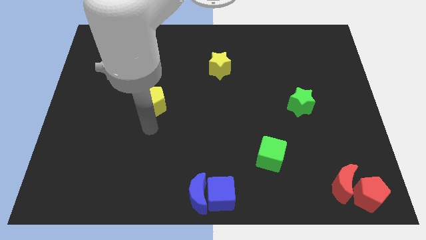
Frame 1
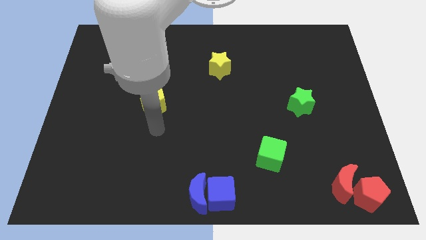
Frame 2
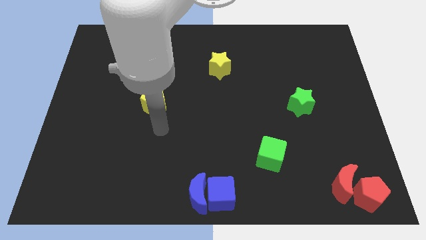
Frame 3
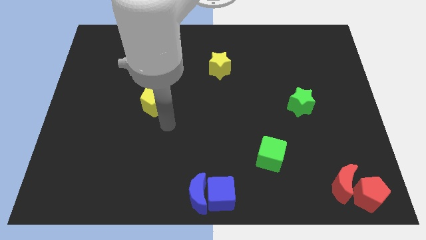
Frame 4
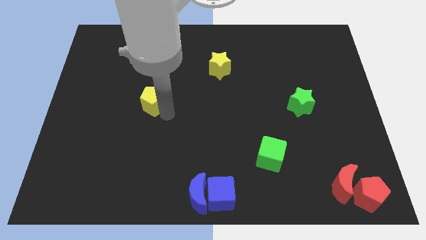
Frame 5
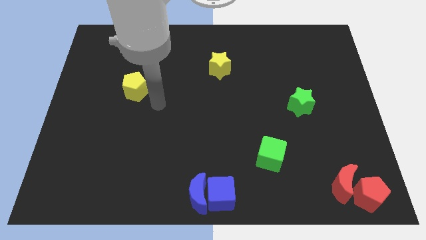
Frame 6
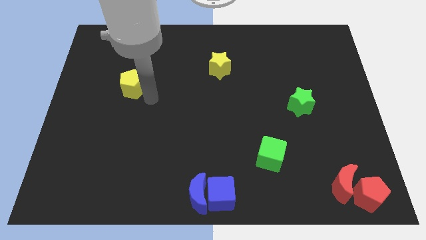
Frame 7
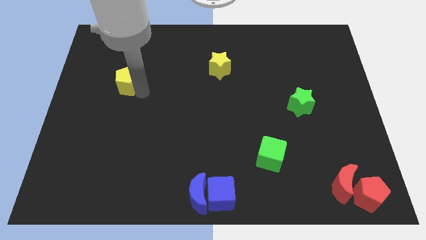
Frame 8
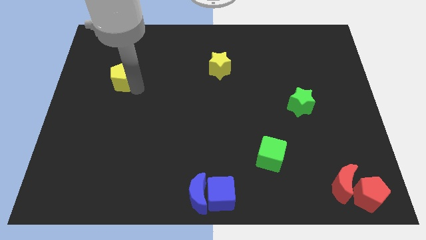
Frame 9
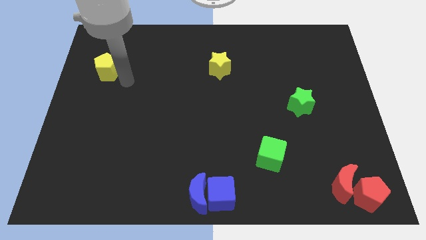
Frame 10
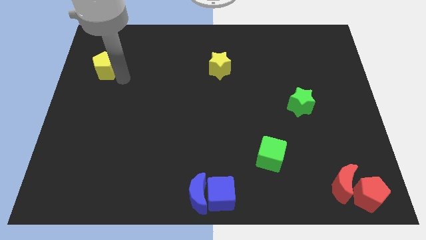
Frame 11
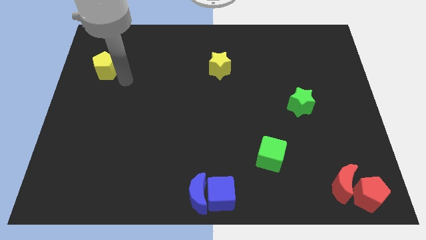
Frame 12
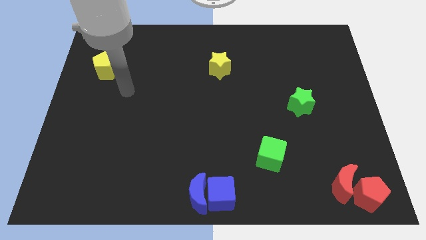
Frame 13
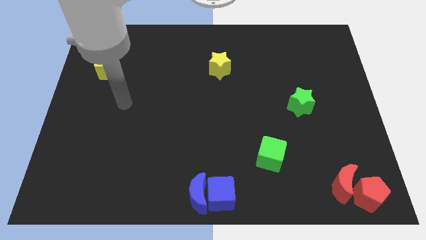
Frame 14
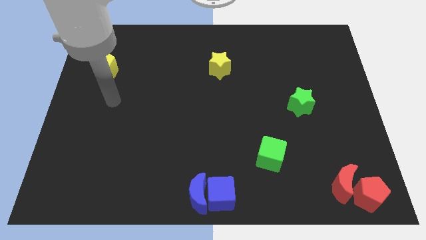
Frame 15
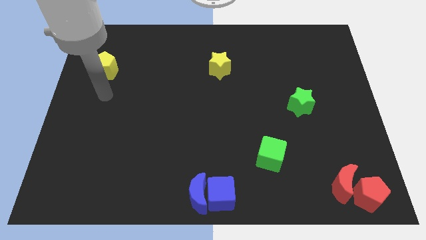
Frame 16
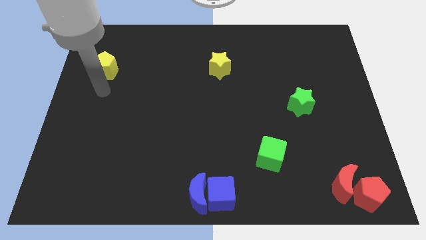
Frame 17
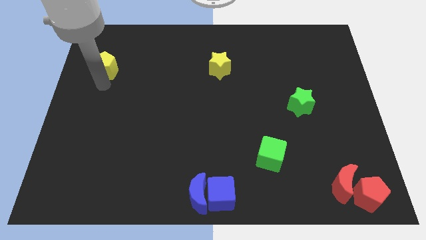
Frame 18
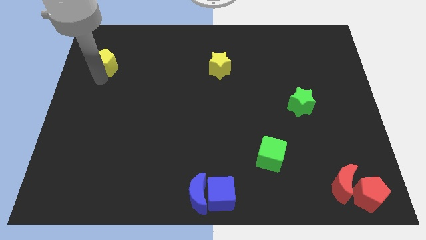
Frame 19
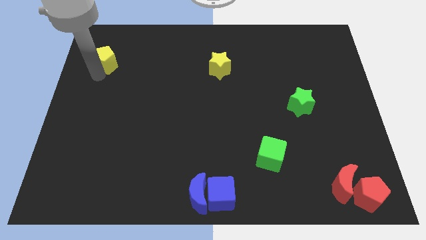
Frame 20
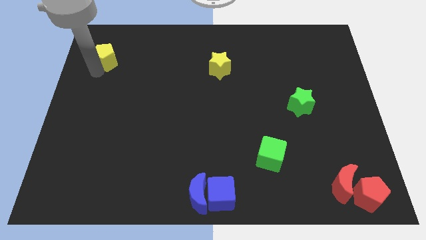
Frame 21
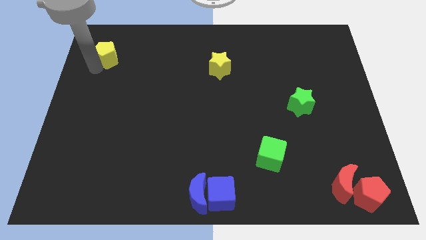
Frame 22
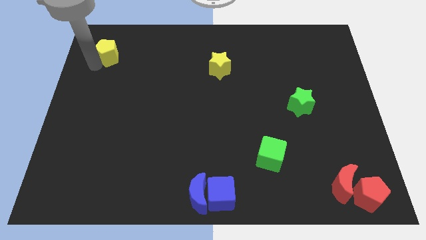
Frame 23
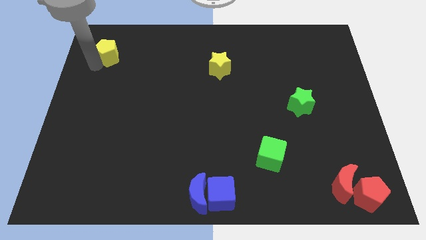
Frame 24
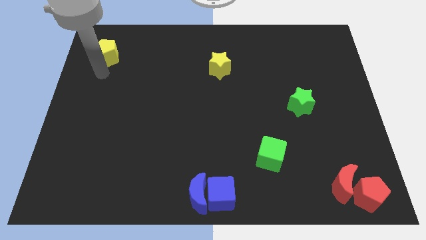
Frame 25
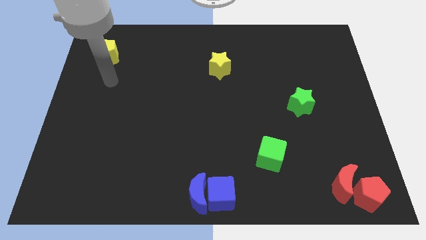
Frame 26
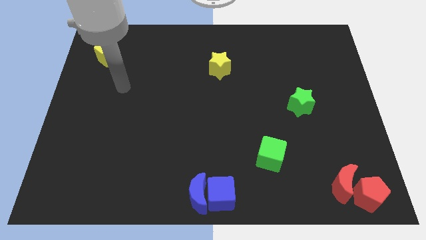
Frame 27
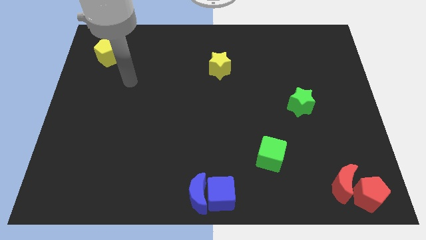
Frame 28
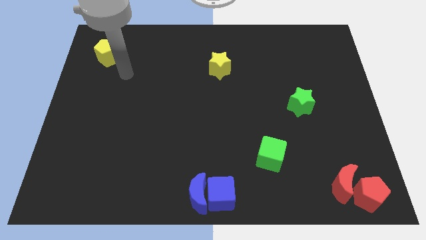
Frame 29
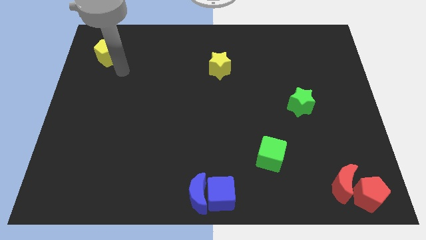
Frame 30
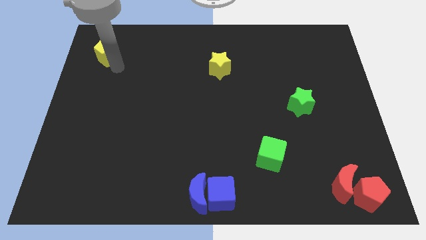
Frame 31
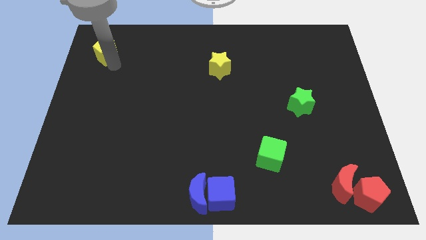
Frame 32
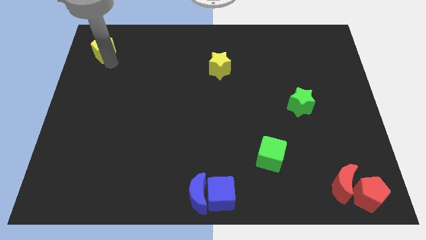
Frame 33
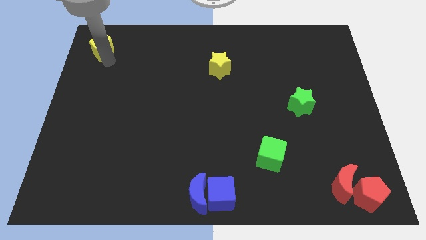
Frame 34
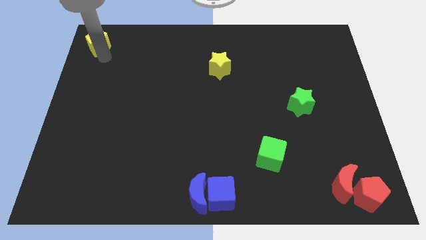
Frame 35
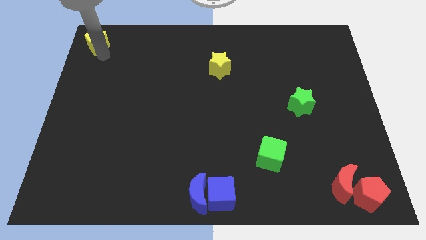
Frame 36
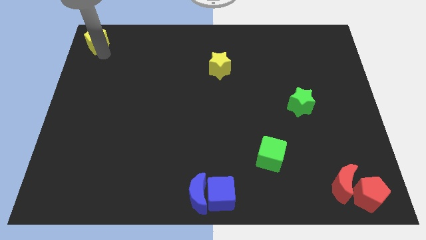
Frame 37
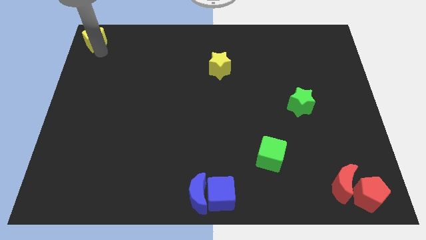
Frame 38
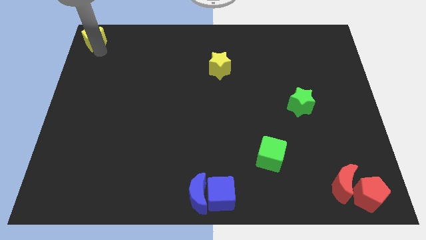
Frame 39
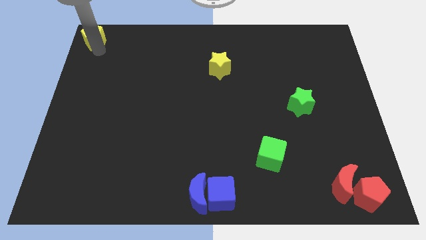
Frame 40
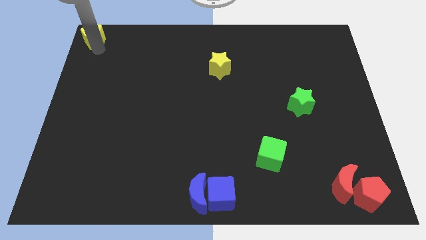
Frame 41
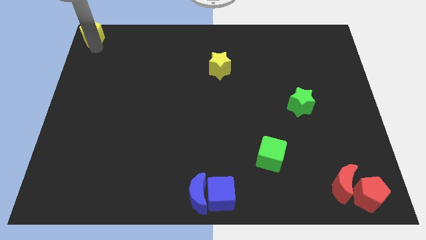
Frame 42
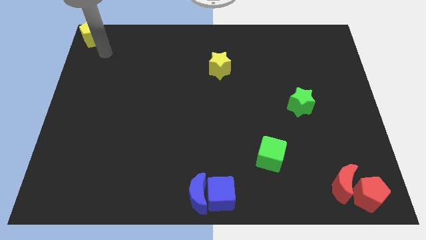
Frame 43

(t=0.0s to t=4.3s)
move yellow pentagon to the top left corner

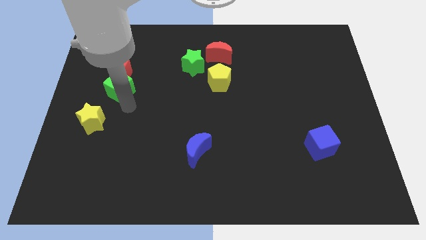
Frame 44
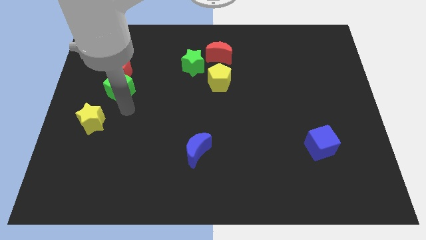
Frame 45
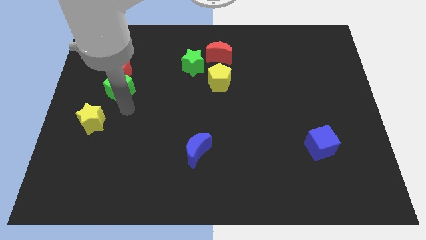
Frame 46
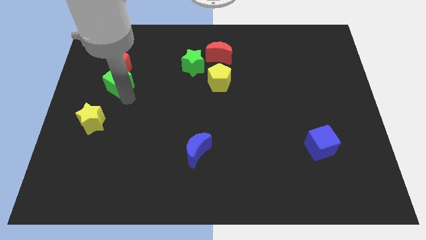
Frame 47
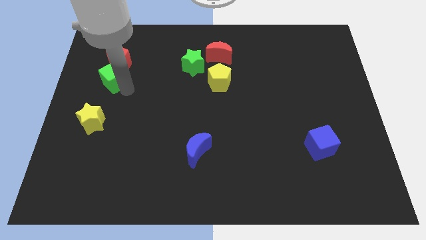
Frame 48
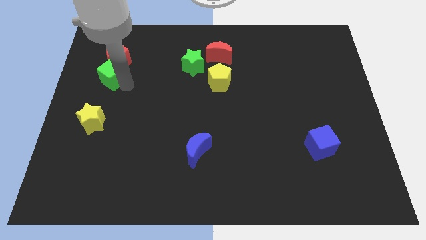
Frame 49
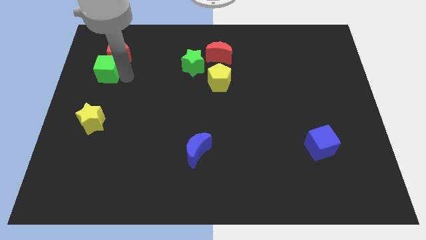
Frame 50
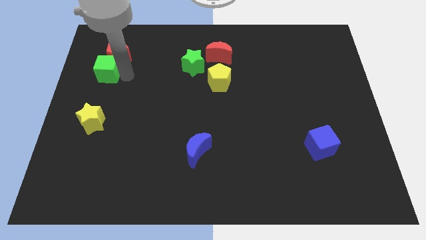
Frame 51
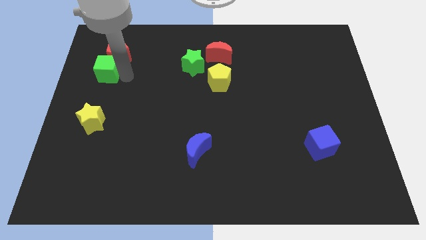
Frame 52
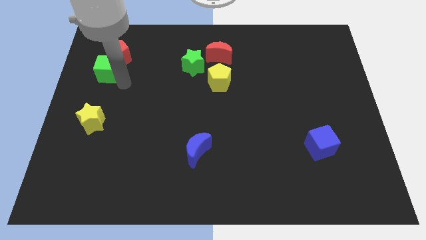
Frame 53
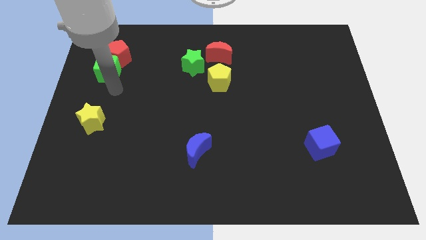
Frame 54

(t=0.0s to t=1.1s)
push the green cube and red pentagon towards the top left of the board

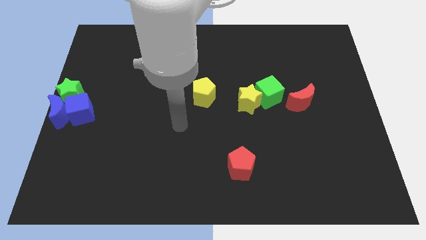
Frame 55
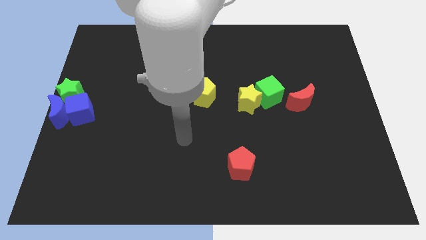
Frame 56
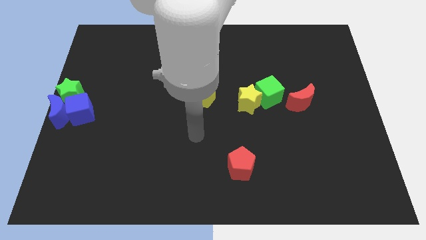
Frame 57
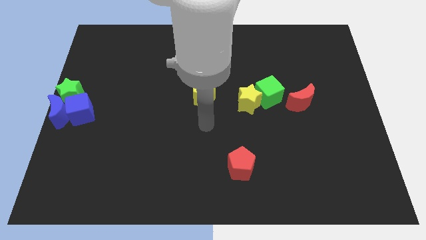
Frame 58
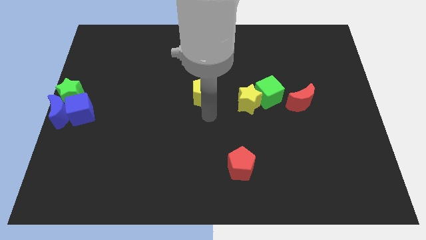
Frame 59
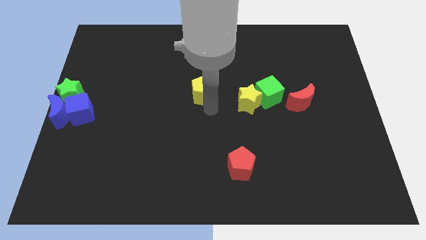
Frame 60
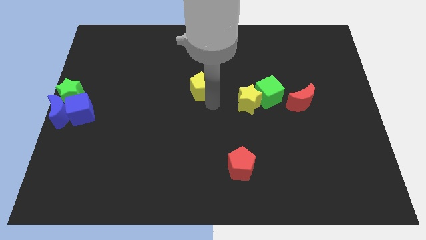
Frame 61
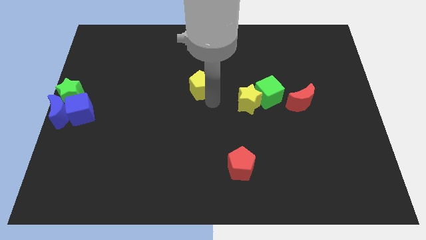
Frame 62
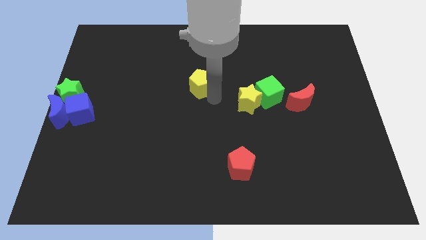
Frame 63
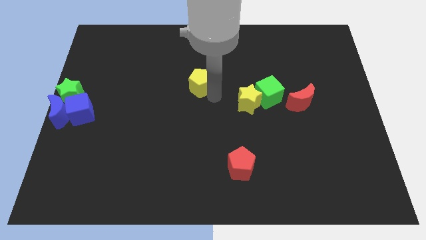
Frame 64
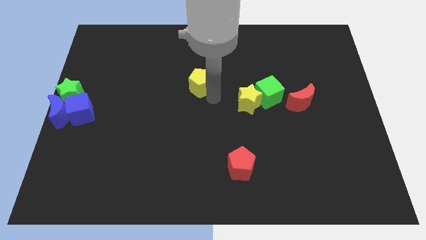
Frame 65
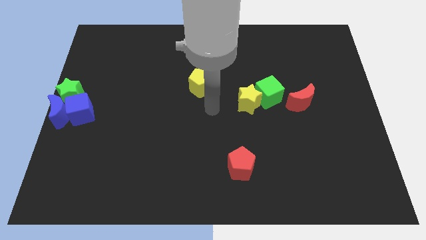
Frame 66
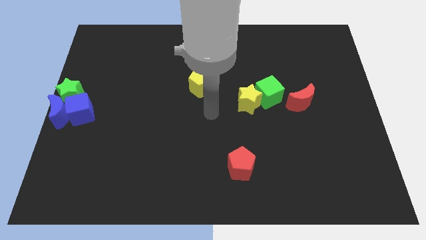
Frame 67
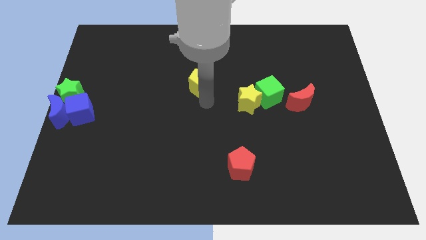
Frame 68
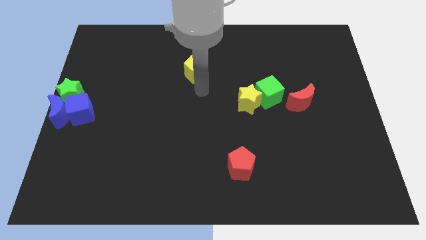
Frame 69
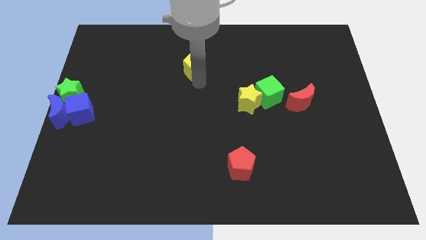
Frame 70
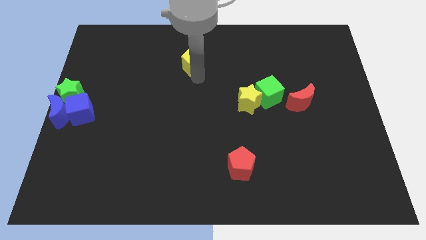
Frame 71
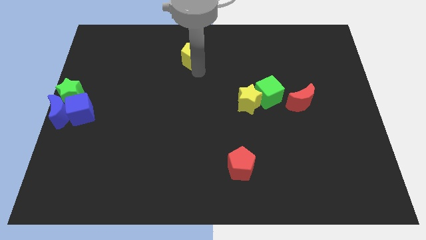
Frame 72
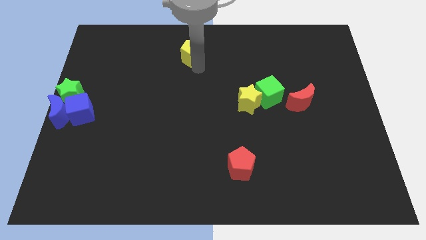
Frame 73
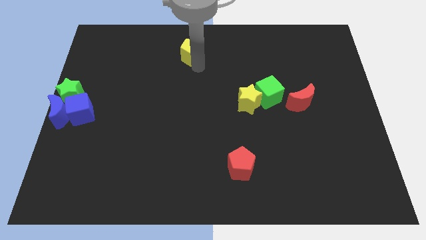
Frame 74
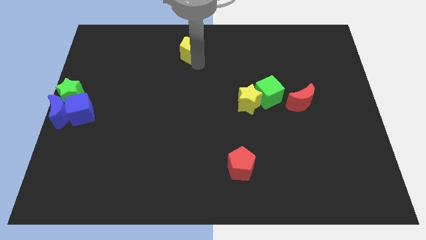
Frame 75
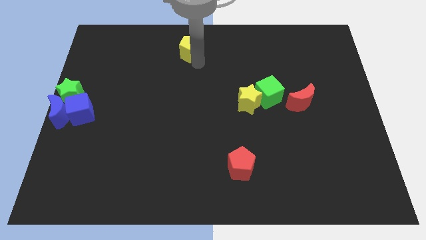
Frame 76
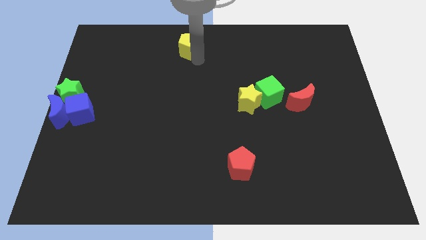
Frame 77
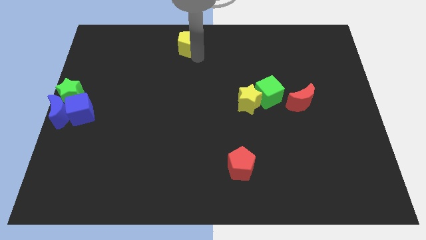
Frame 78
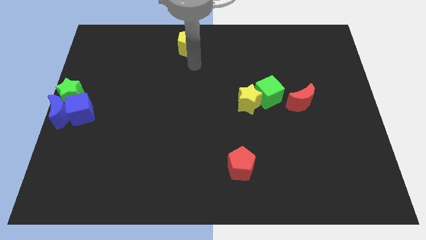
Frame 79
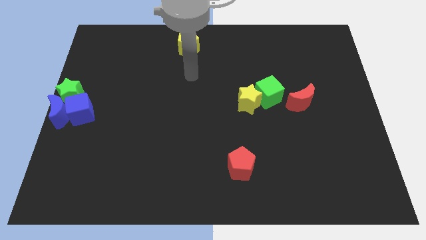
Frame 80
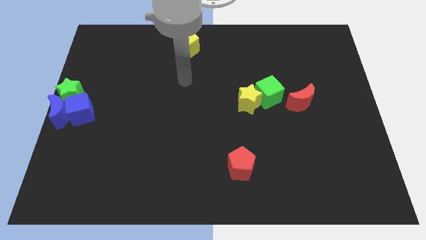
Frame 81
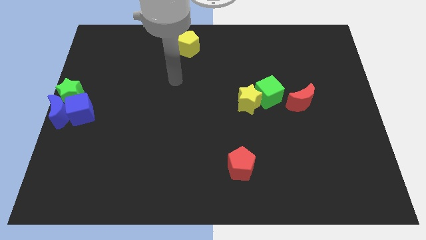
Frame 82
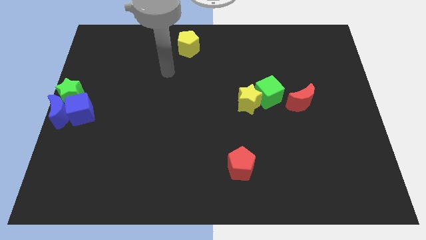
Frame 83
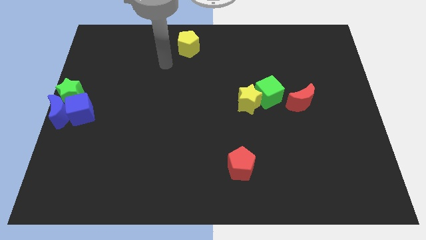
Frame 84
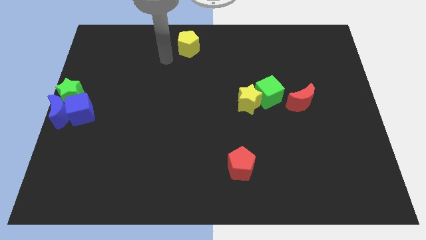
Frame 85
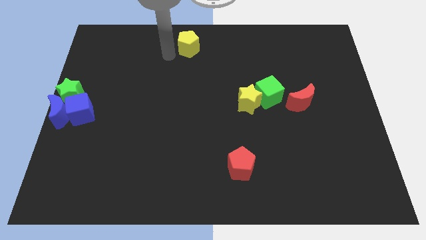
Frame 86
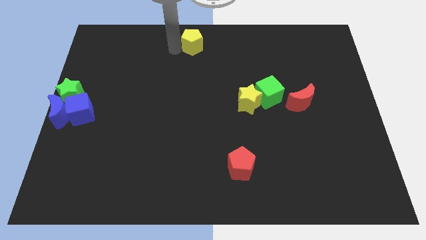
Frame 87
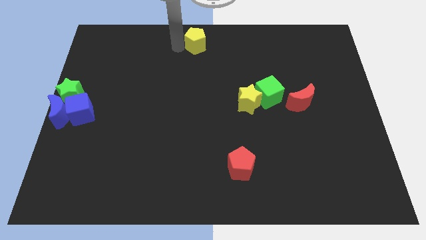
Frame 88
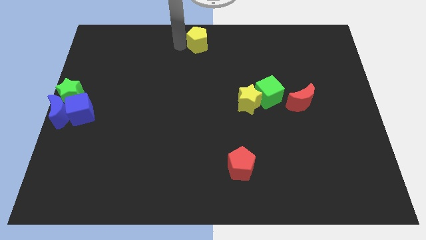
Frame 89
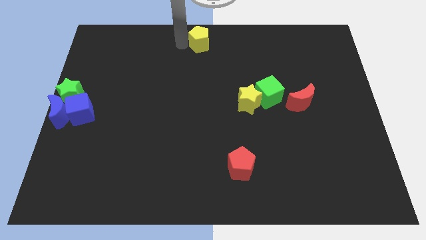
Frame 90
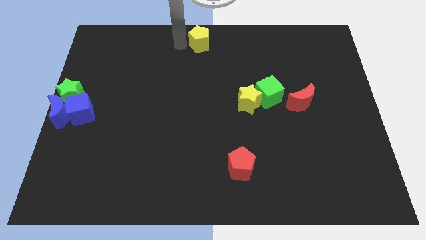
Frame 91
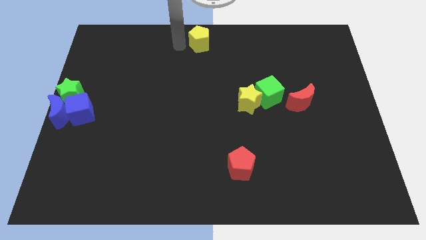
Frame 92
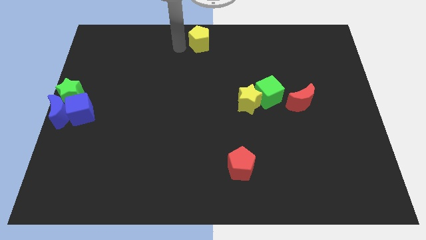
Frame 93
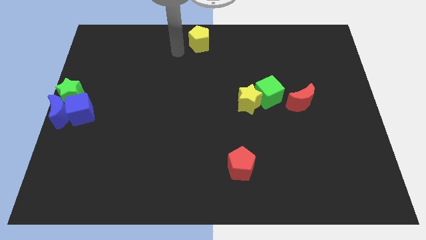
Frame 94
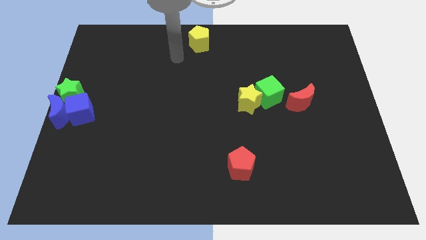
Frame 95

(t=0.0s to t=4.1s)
slide yellow pentagon towards top center
